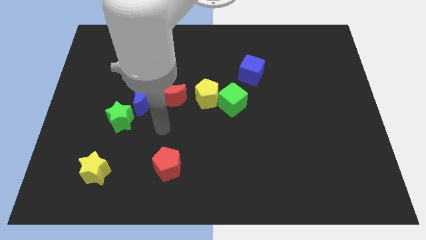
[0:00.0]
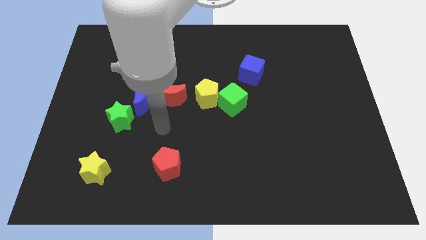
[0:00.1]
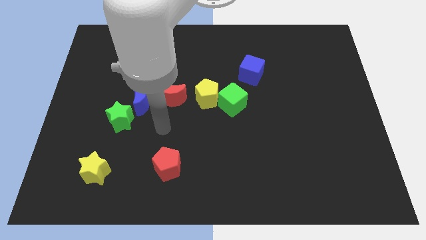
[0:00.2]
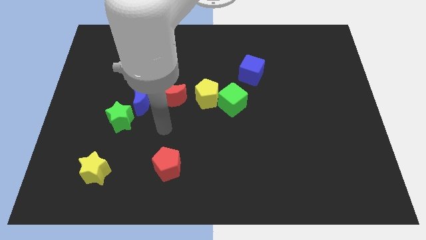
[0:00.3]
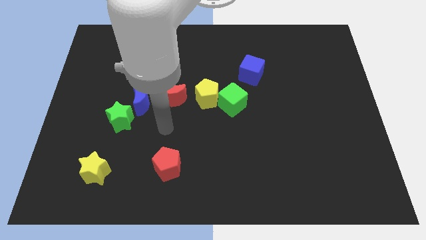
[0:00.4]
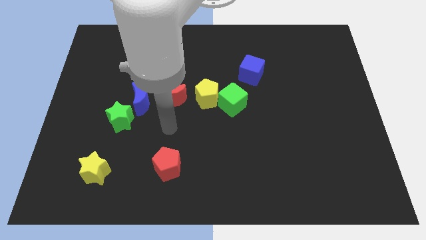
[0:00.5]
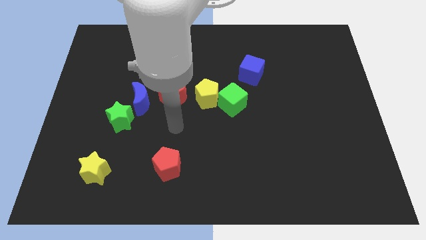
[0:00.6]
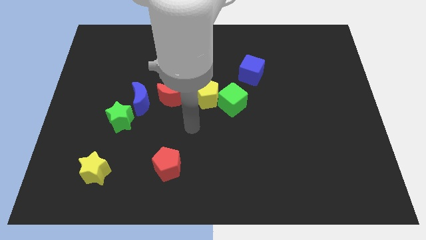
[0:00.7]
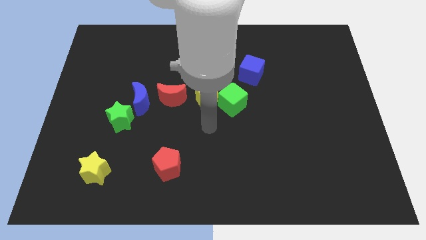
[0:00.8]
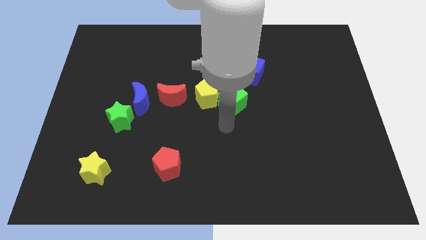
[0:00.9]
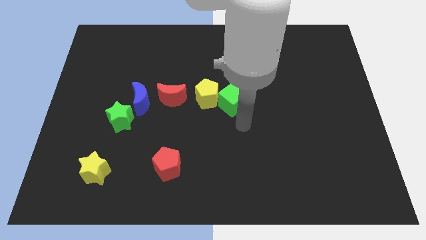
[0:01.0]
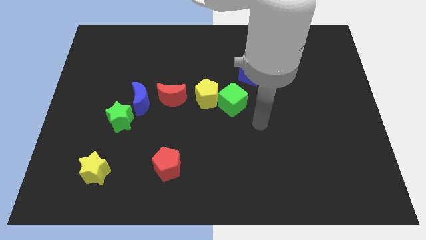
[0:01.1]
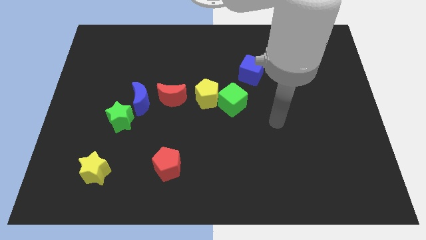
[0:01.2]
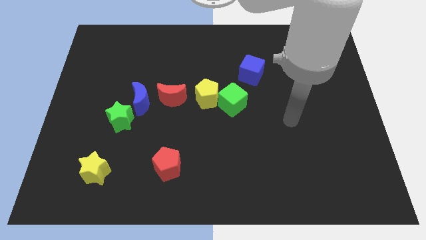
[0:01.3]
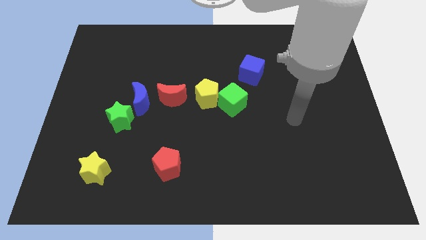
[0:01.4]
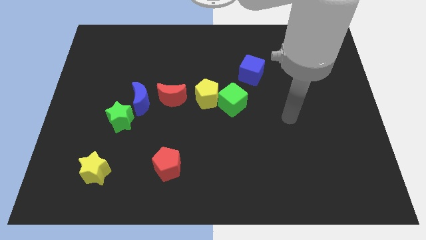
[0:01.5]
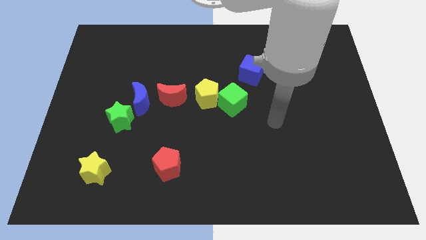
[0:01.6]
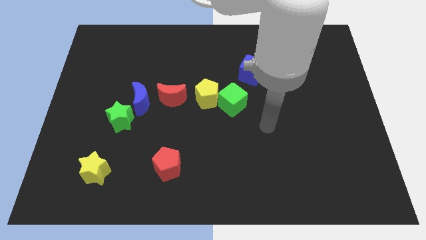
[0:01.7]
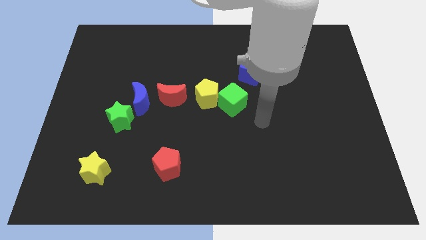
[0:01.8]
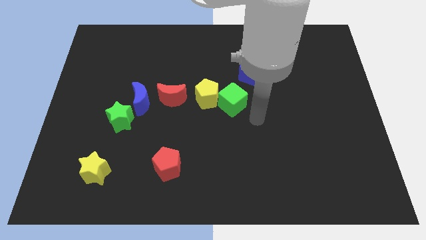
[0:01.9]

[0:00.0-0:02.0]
put your hand parallel right to the green cube

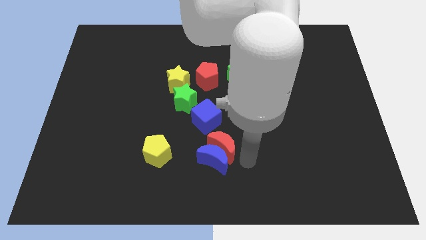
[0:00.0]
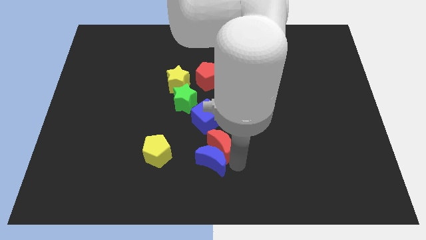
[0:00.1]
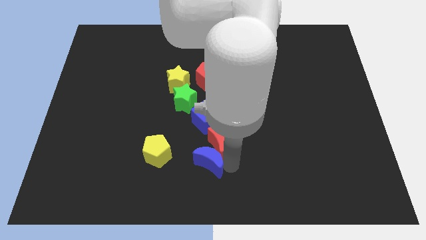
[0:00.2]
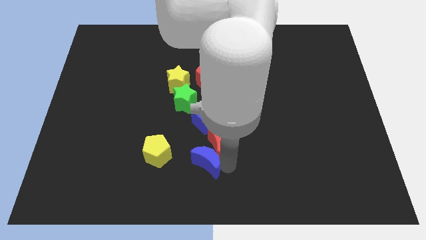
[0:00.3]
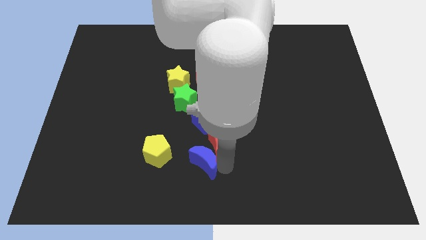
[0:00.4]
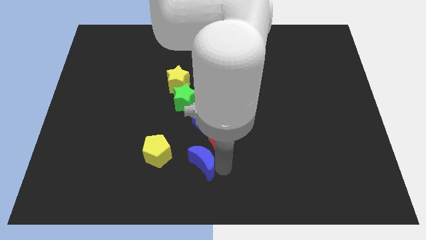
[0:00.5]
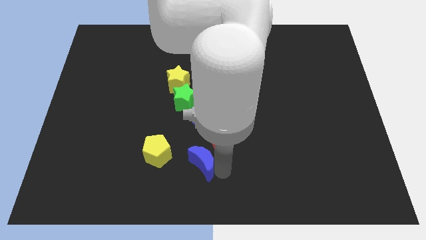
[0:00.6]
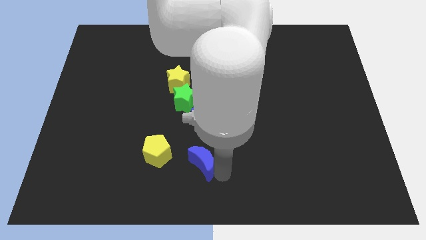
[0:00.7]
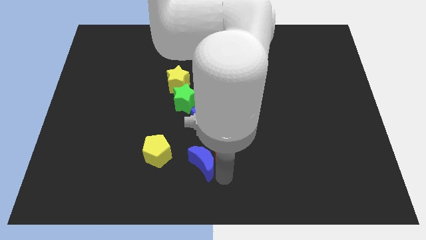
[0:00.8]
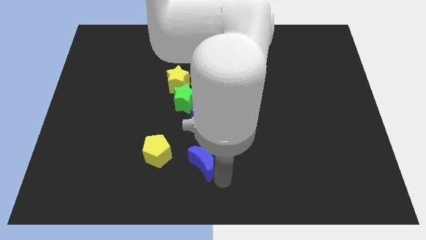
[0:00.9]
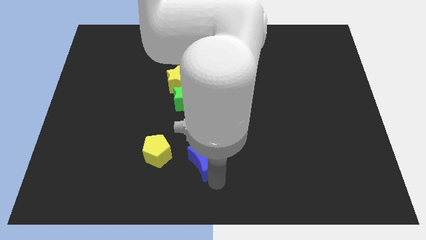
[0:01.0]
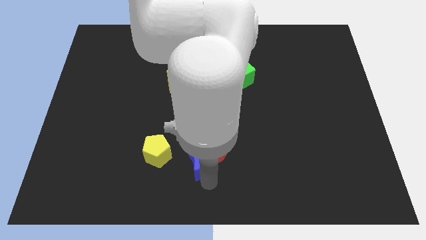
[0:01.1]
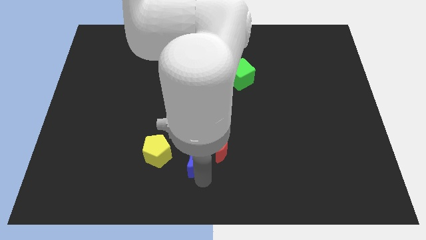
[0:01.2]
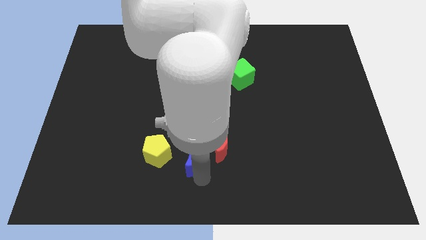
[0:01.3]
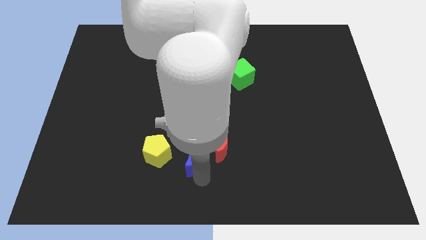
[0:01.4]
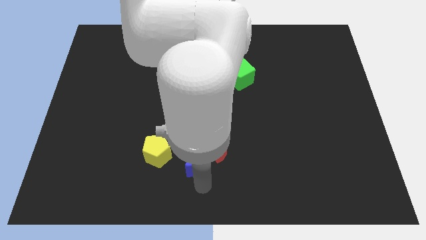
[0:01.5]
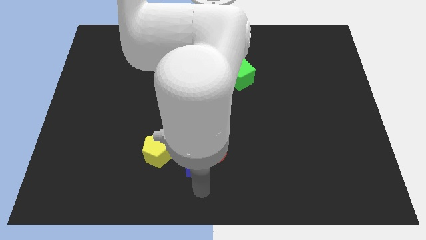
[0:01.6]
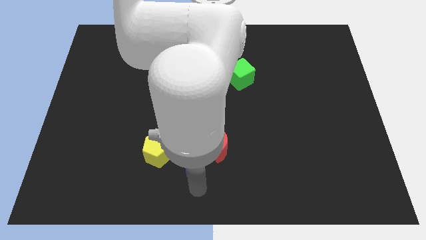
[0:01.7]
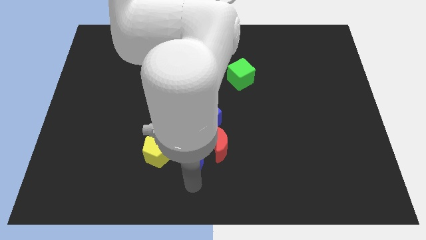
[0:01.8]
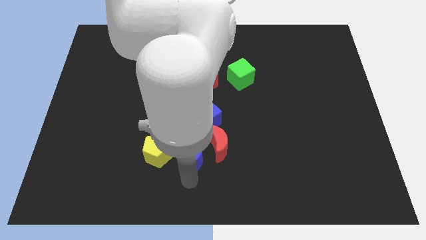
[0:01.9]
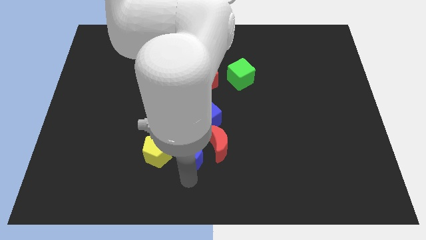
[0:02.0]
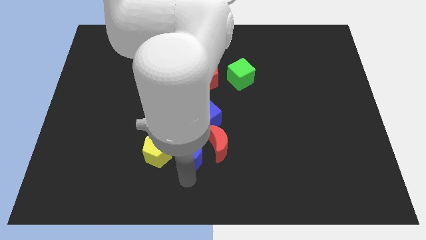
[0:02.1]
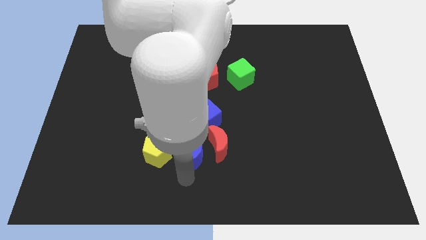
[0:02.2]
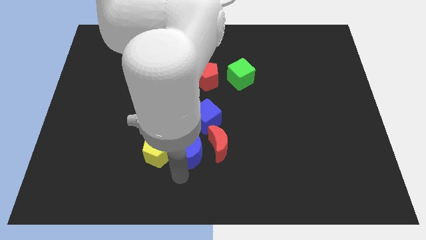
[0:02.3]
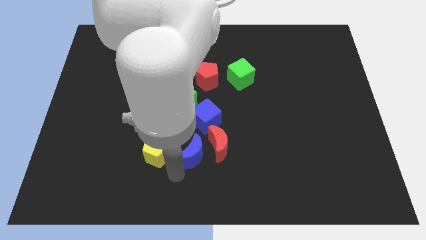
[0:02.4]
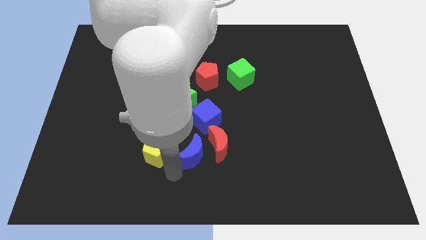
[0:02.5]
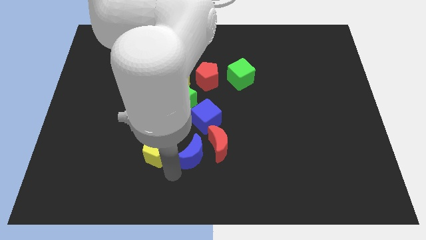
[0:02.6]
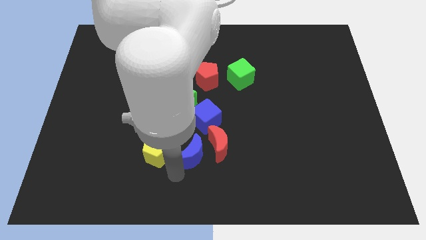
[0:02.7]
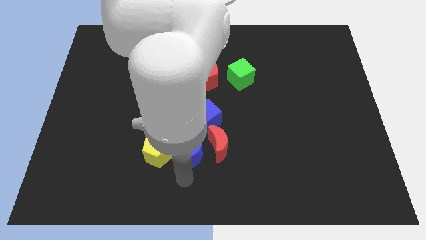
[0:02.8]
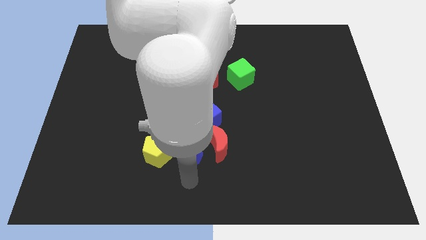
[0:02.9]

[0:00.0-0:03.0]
move the blue moon in between the yellow pentagon and red moon

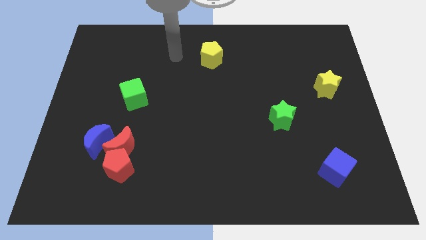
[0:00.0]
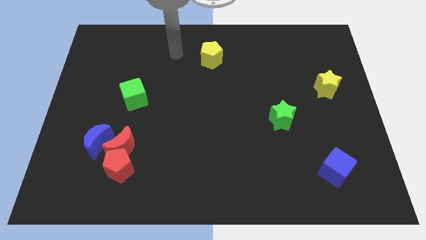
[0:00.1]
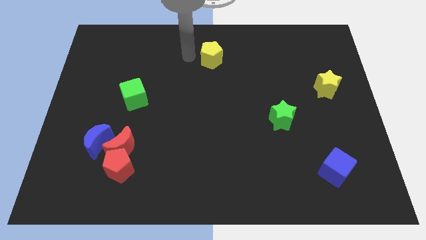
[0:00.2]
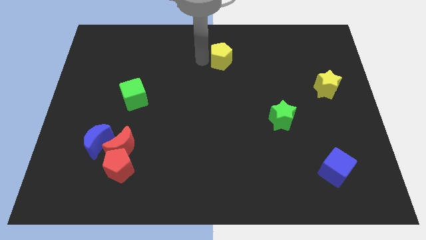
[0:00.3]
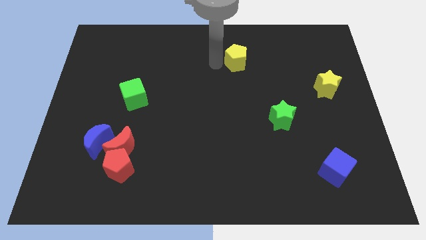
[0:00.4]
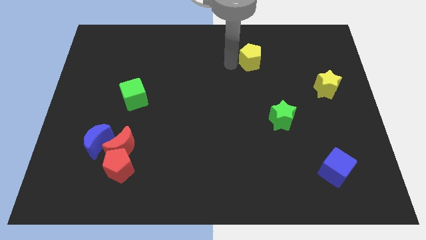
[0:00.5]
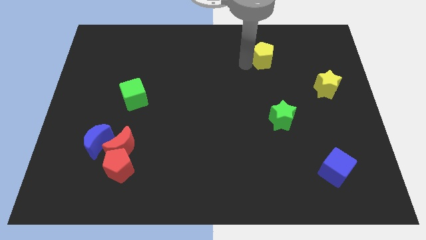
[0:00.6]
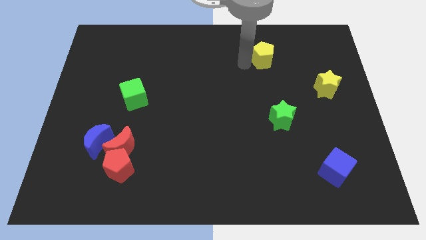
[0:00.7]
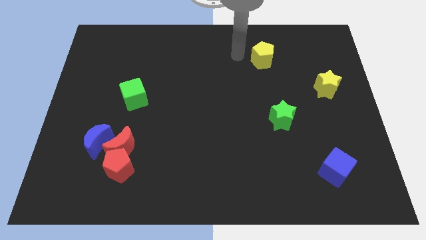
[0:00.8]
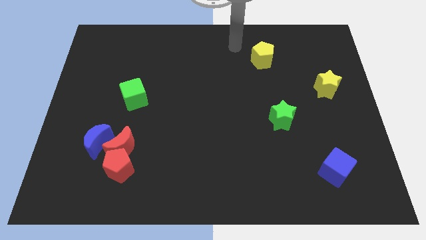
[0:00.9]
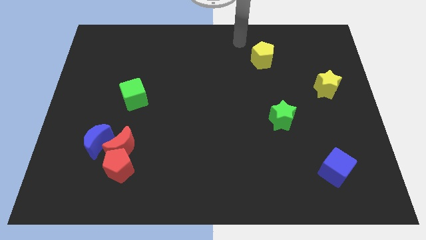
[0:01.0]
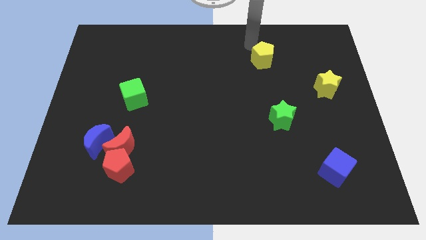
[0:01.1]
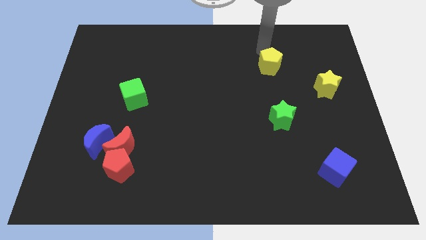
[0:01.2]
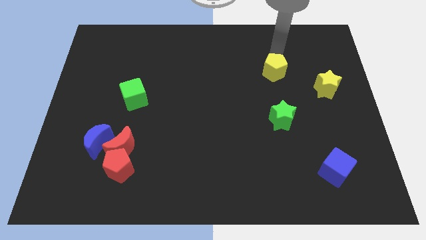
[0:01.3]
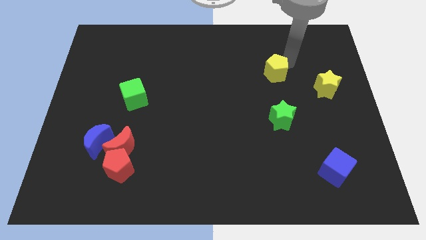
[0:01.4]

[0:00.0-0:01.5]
place the yellow pentagon vertically above the green star

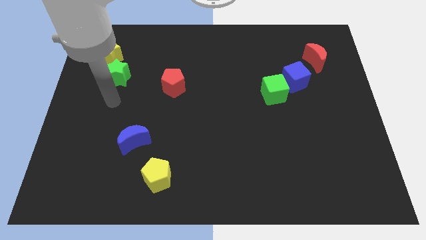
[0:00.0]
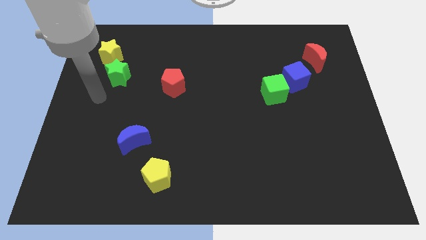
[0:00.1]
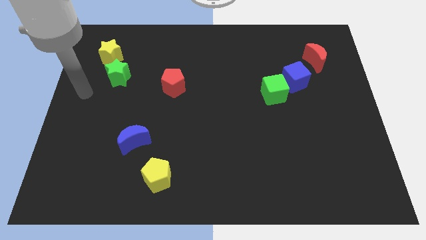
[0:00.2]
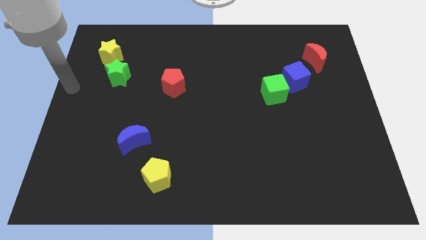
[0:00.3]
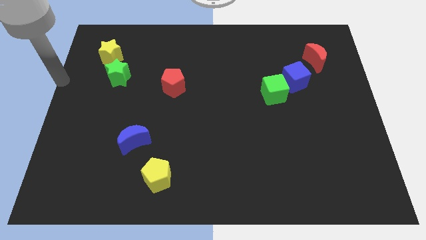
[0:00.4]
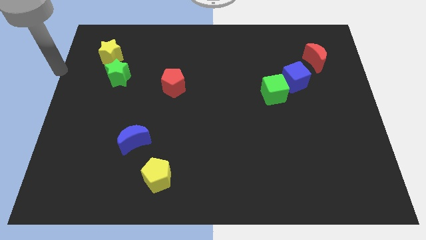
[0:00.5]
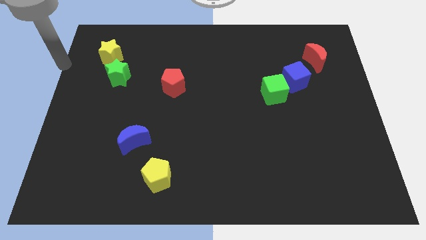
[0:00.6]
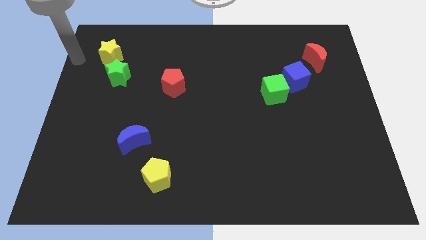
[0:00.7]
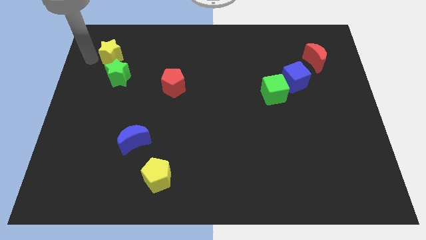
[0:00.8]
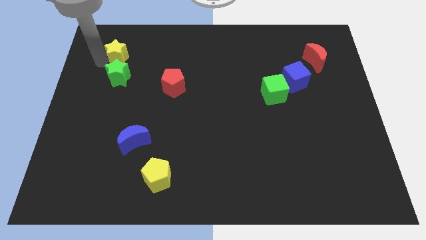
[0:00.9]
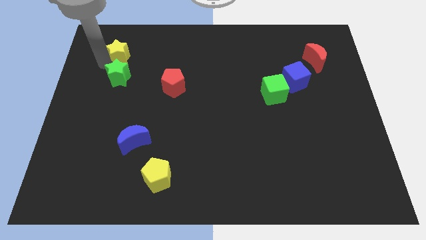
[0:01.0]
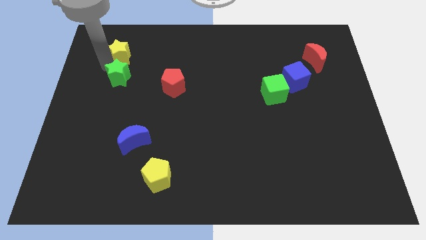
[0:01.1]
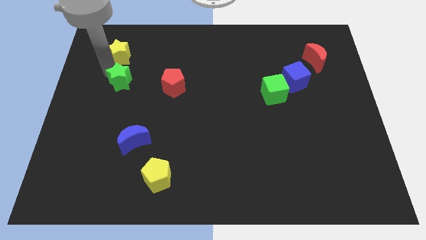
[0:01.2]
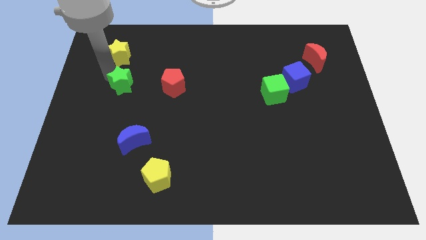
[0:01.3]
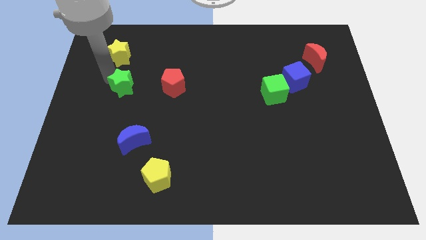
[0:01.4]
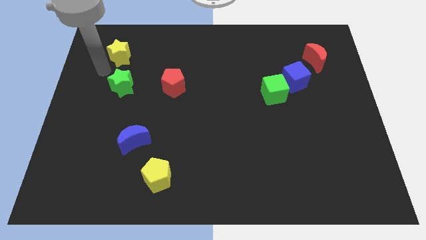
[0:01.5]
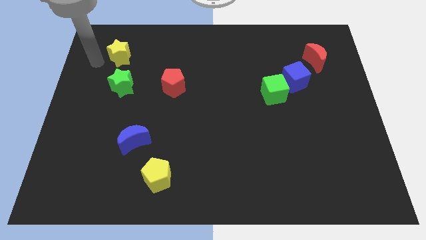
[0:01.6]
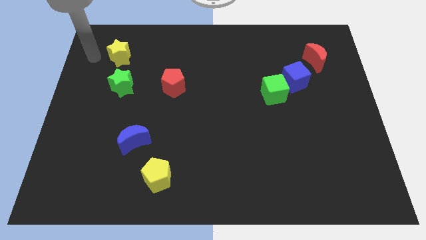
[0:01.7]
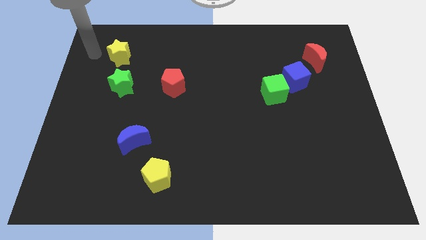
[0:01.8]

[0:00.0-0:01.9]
separate green star from yellow star

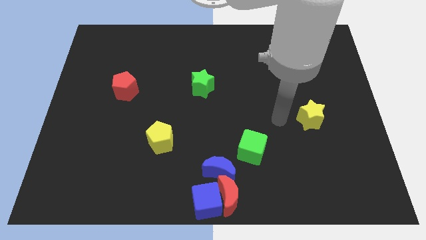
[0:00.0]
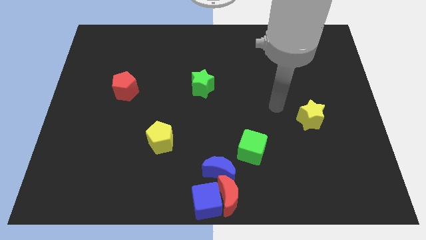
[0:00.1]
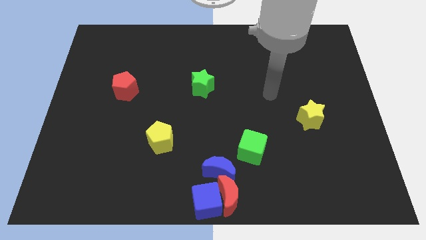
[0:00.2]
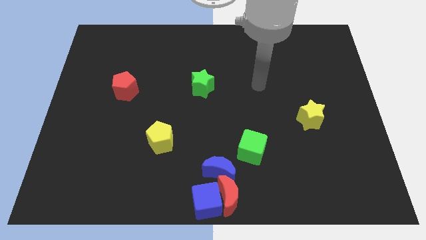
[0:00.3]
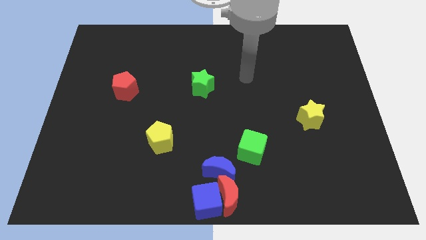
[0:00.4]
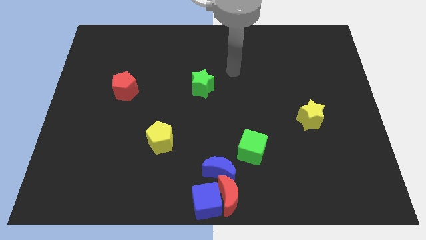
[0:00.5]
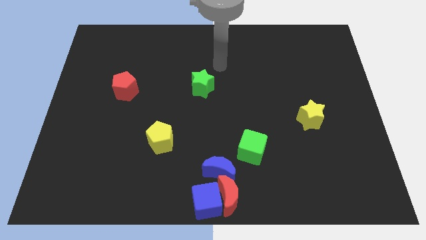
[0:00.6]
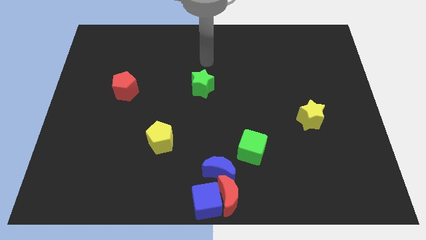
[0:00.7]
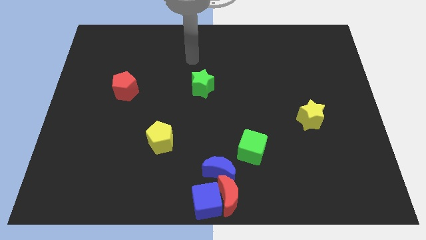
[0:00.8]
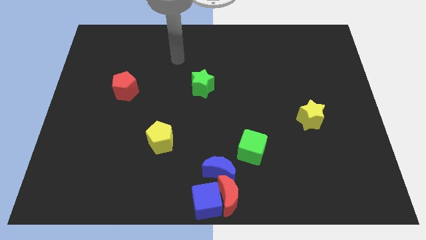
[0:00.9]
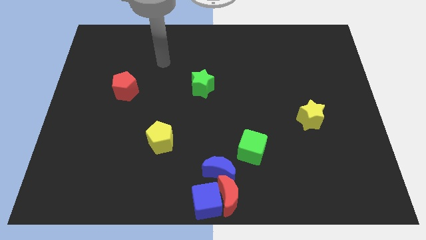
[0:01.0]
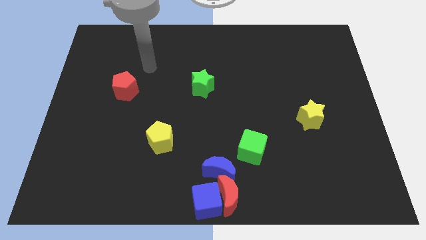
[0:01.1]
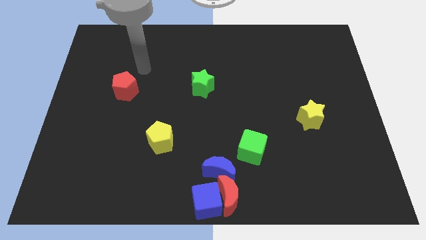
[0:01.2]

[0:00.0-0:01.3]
move your arm near to the red pentagon
